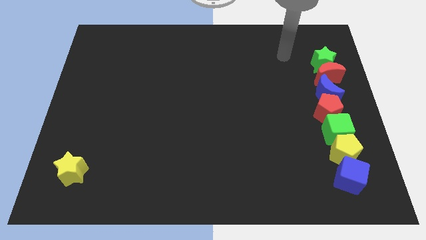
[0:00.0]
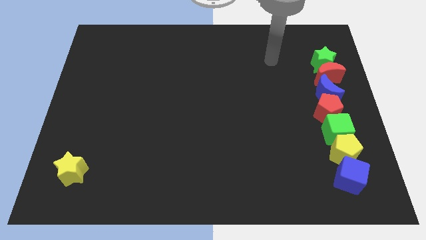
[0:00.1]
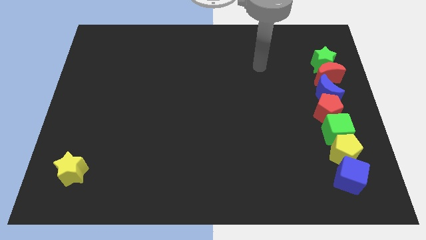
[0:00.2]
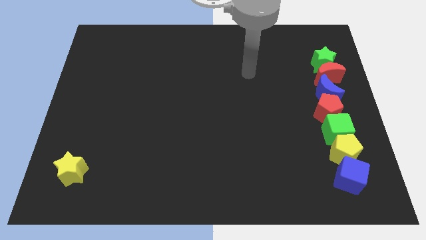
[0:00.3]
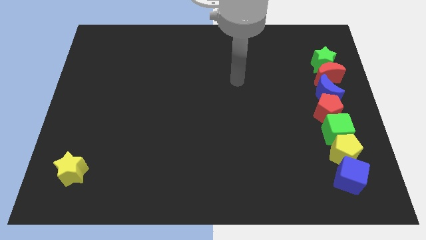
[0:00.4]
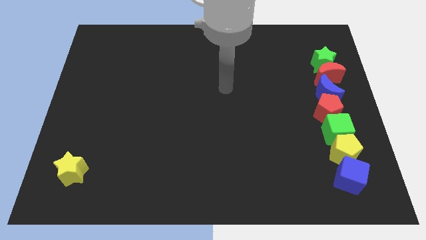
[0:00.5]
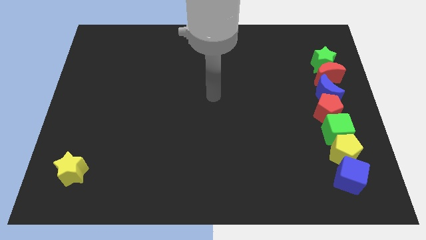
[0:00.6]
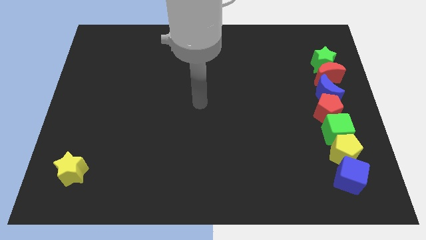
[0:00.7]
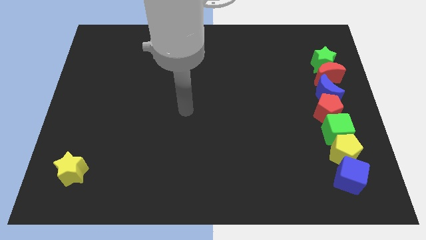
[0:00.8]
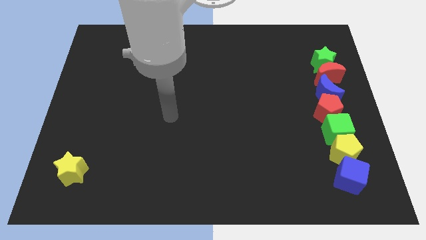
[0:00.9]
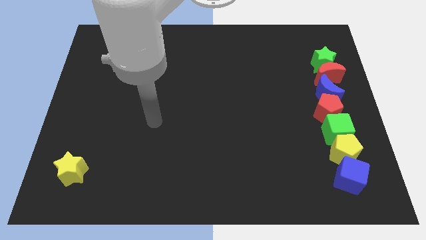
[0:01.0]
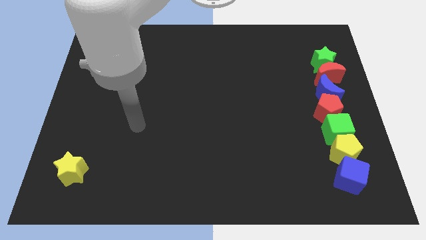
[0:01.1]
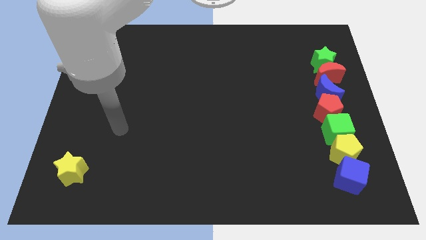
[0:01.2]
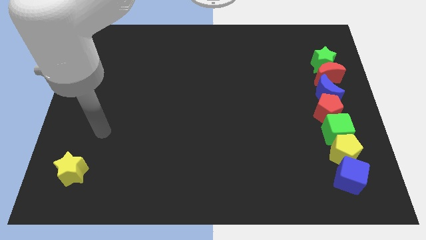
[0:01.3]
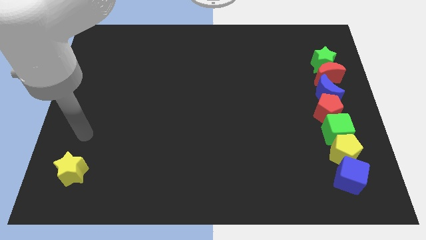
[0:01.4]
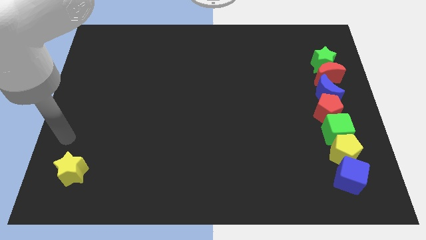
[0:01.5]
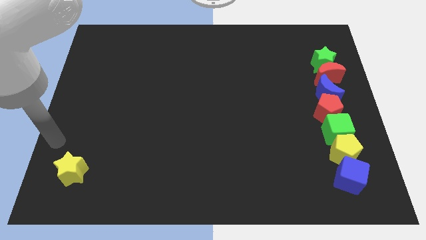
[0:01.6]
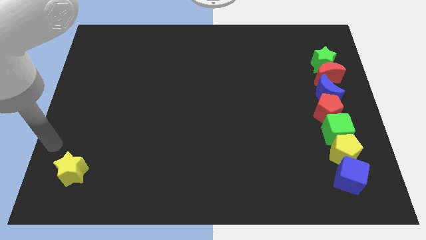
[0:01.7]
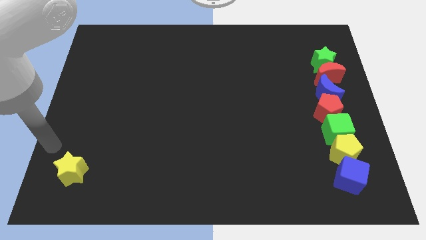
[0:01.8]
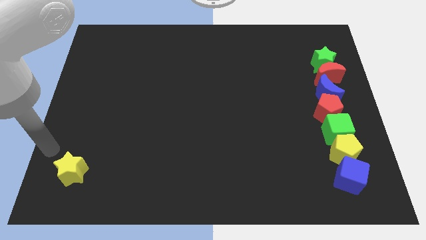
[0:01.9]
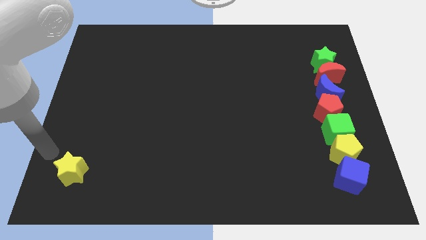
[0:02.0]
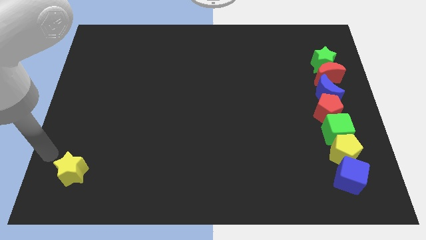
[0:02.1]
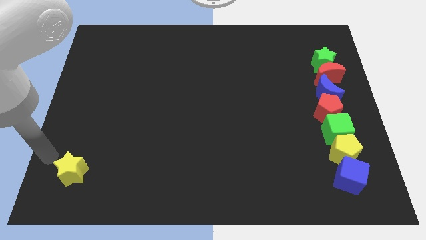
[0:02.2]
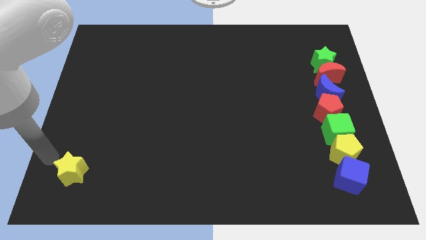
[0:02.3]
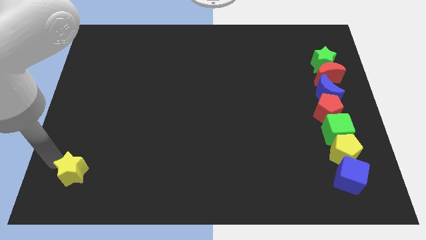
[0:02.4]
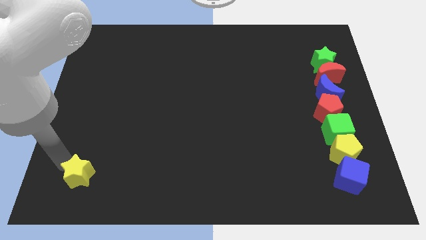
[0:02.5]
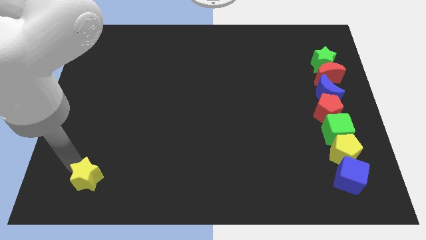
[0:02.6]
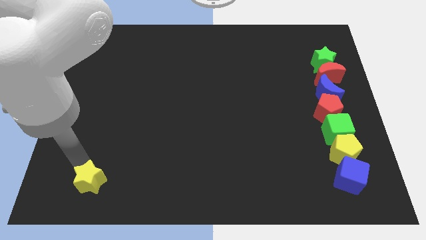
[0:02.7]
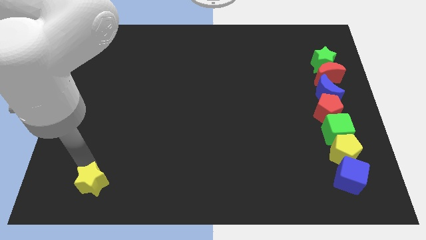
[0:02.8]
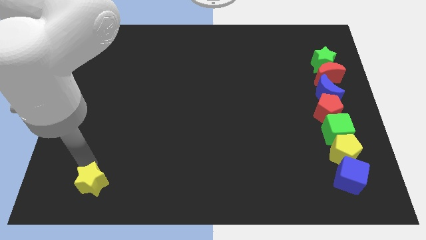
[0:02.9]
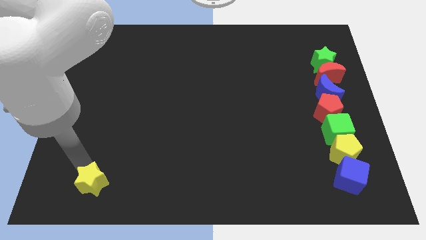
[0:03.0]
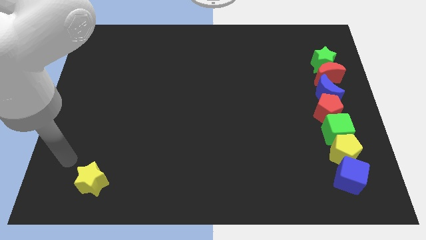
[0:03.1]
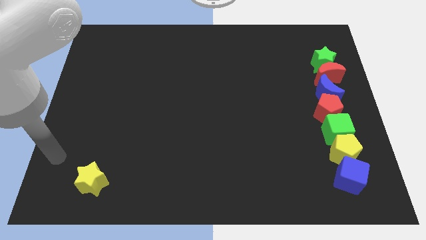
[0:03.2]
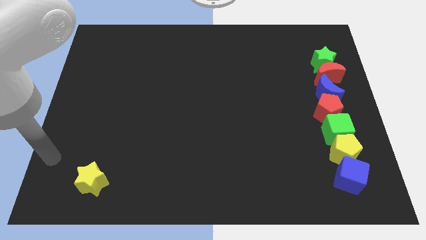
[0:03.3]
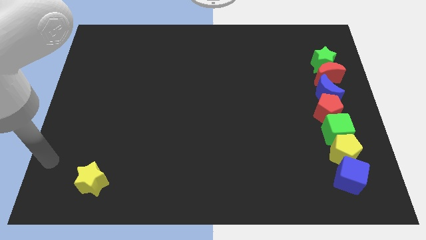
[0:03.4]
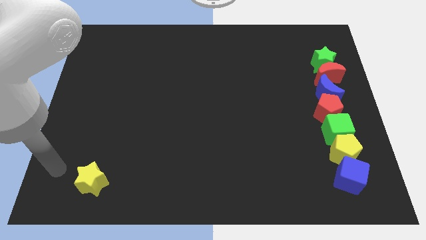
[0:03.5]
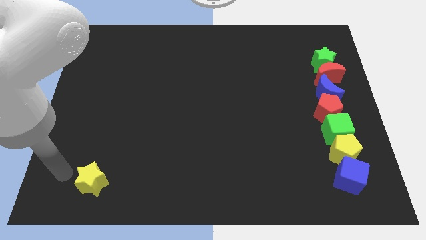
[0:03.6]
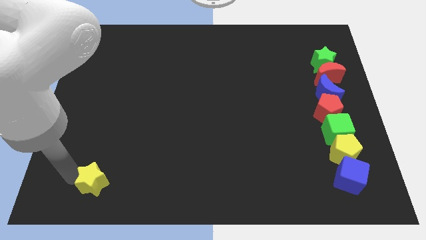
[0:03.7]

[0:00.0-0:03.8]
move yellow star slightly right

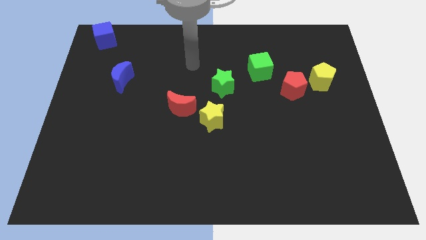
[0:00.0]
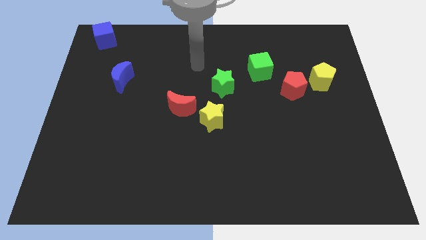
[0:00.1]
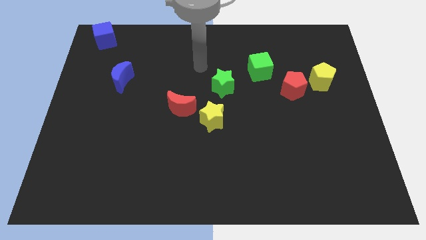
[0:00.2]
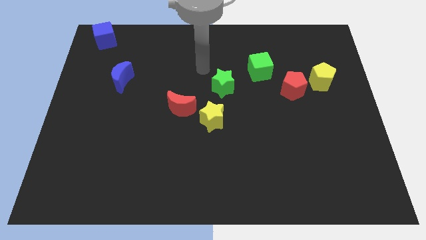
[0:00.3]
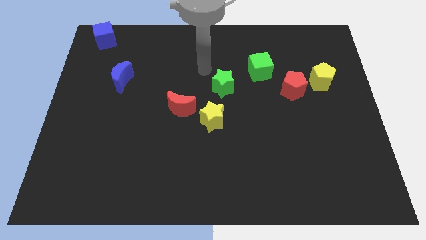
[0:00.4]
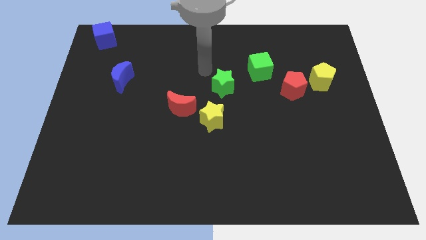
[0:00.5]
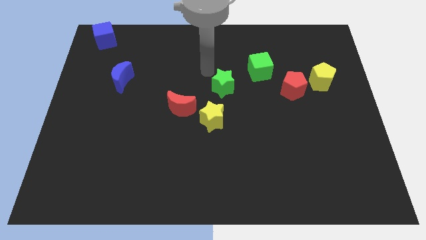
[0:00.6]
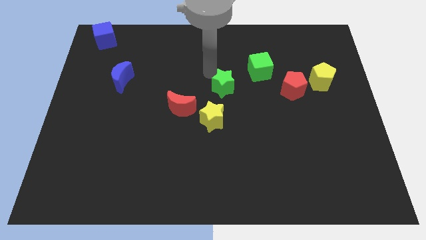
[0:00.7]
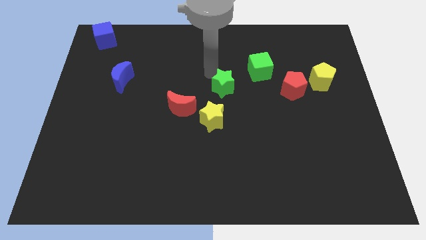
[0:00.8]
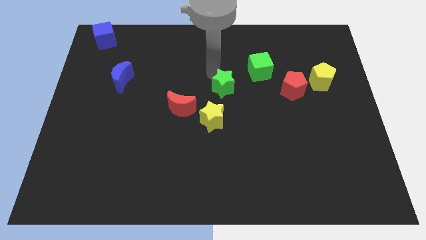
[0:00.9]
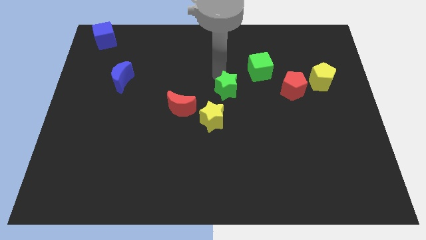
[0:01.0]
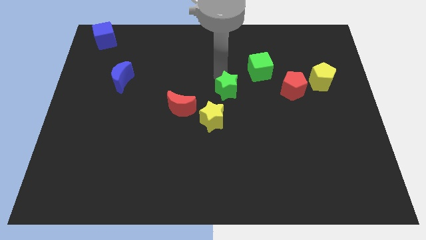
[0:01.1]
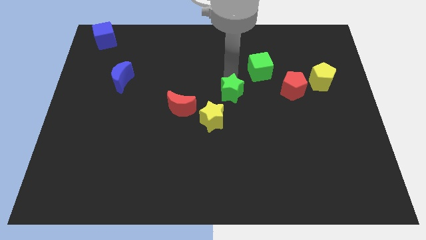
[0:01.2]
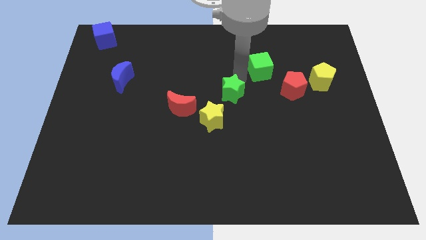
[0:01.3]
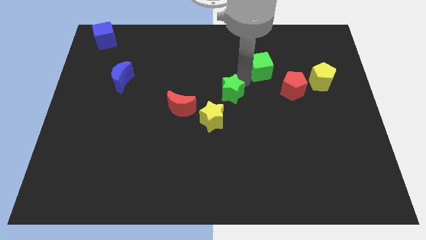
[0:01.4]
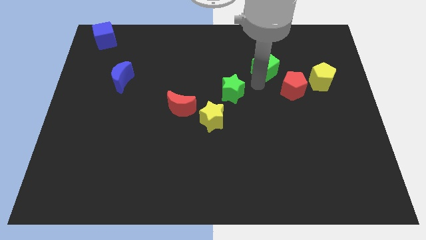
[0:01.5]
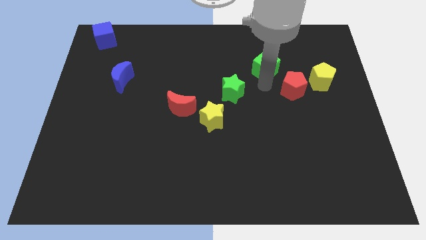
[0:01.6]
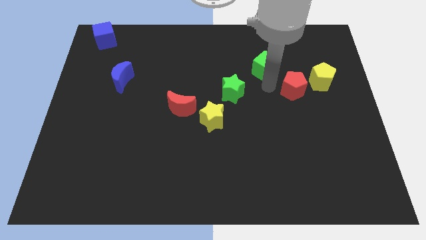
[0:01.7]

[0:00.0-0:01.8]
place green star diagonally to the top right of the yellow star

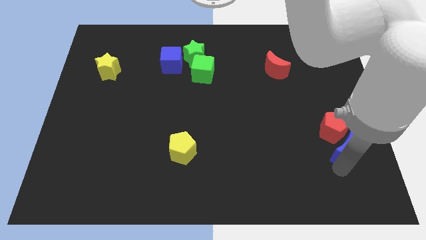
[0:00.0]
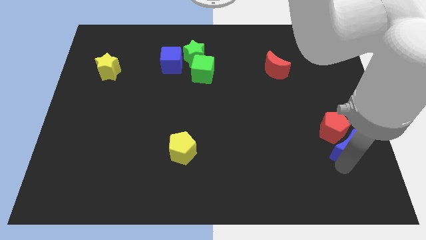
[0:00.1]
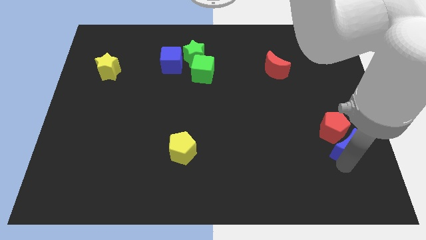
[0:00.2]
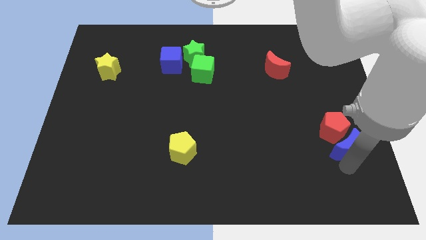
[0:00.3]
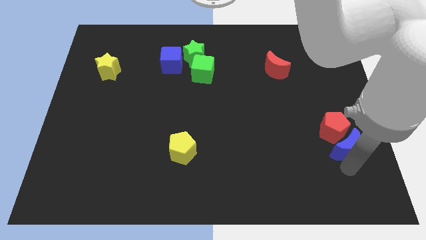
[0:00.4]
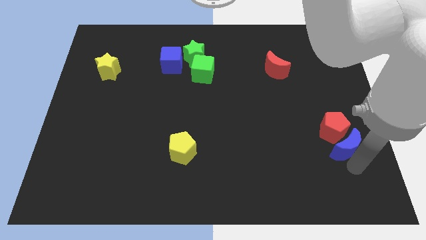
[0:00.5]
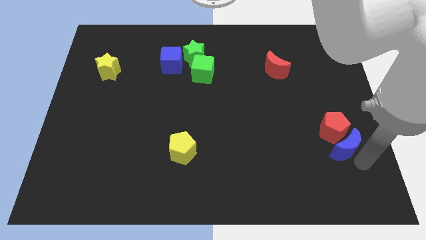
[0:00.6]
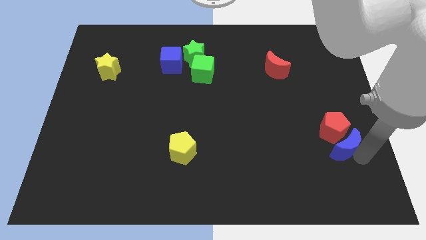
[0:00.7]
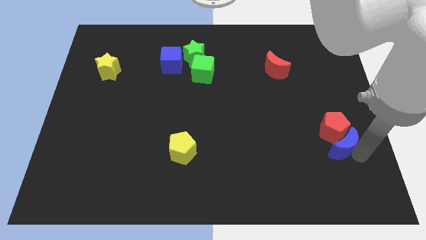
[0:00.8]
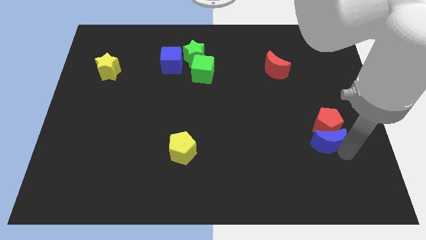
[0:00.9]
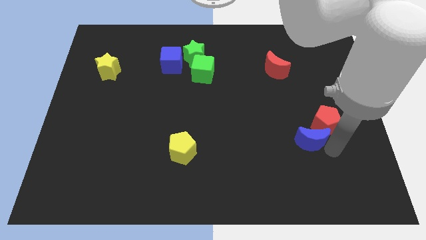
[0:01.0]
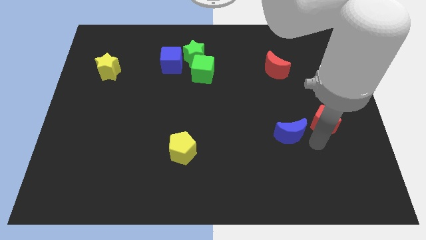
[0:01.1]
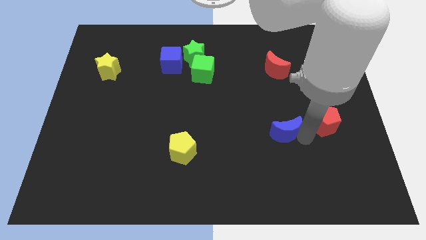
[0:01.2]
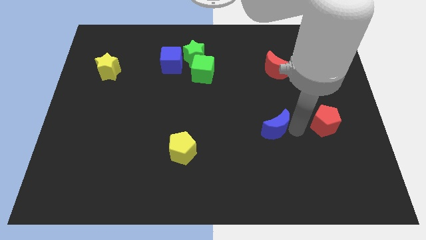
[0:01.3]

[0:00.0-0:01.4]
separate the blue crescent from the red pentagon

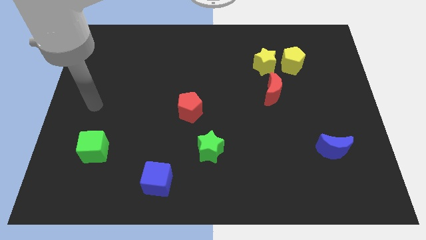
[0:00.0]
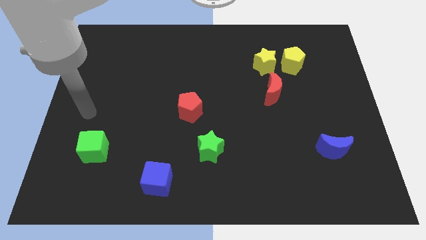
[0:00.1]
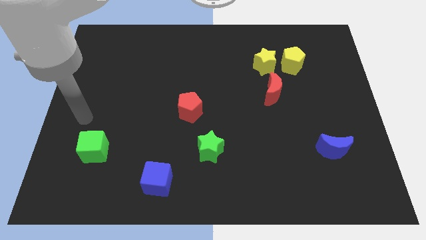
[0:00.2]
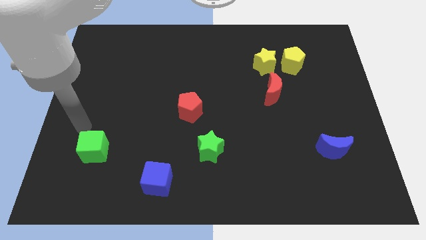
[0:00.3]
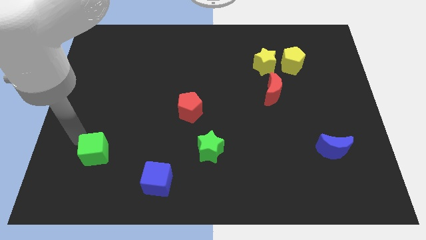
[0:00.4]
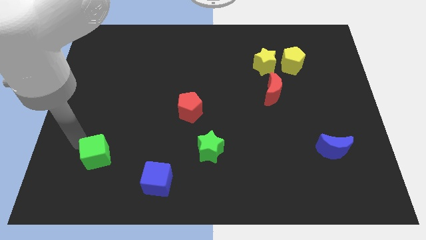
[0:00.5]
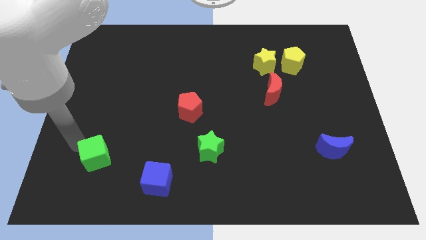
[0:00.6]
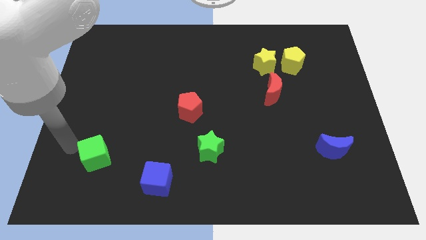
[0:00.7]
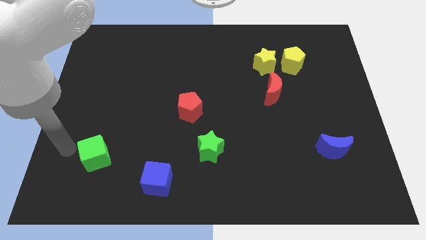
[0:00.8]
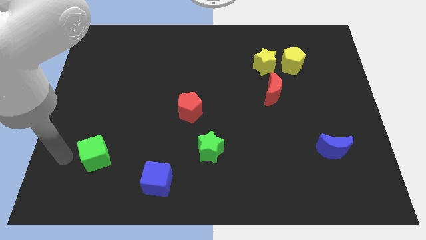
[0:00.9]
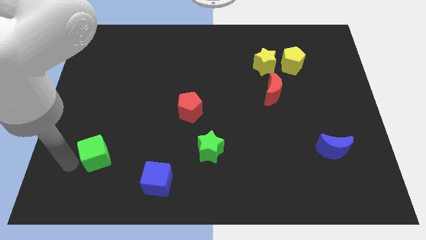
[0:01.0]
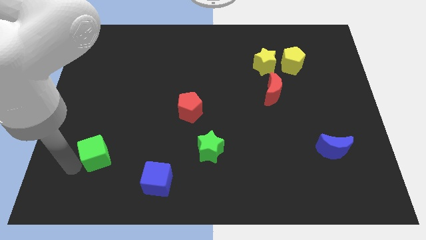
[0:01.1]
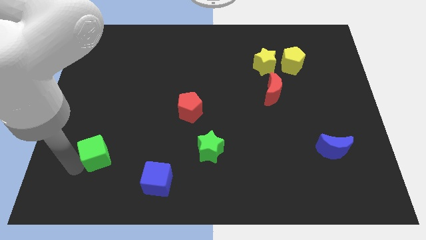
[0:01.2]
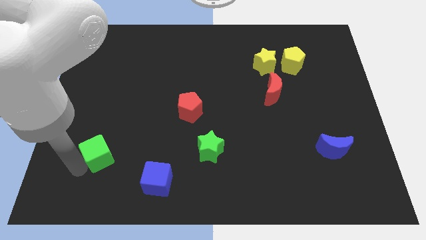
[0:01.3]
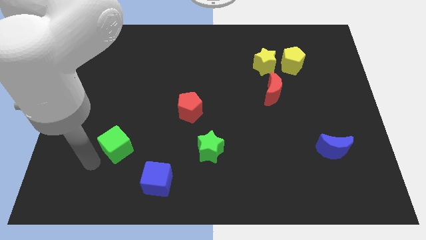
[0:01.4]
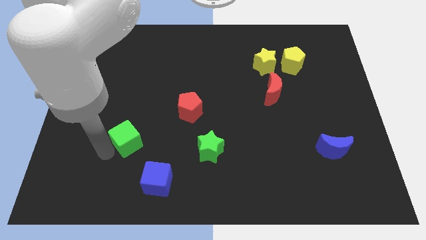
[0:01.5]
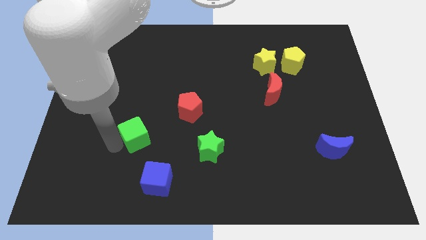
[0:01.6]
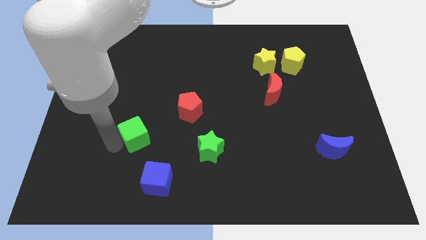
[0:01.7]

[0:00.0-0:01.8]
move the green cube to the top left of the blue cube

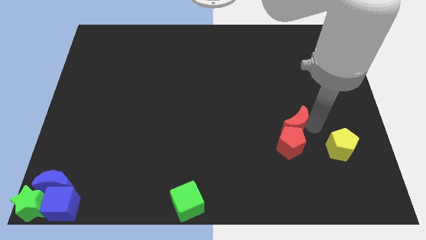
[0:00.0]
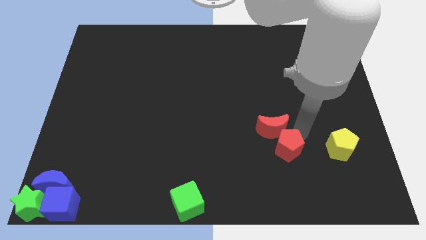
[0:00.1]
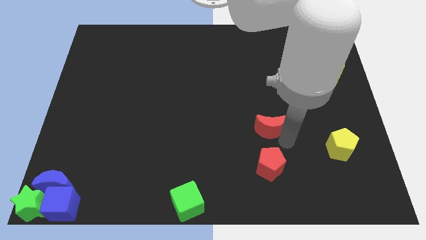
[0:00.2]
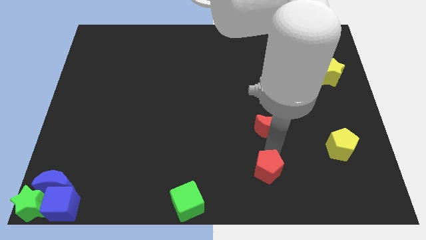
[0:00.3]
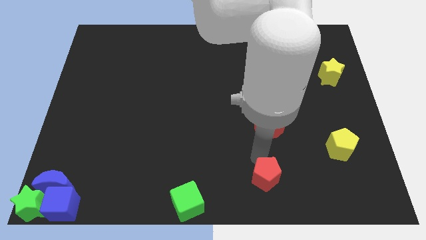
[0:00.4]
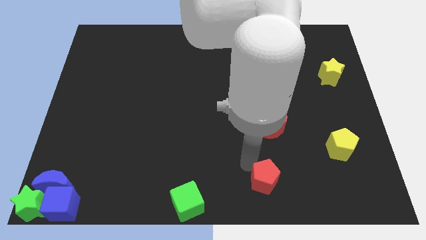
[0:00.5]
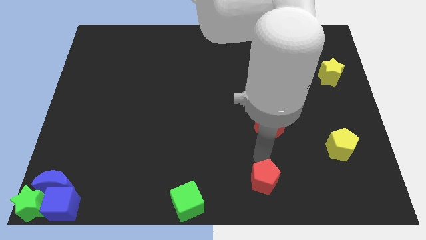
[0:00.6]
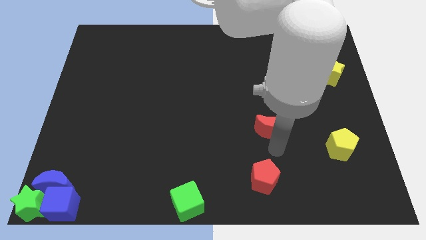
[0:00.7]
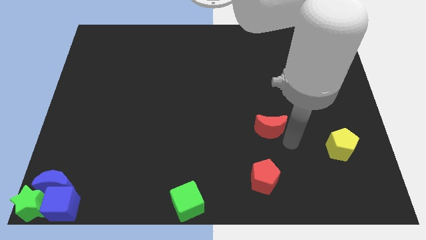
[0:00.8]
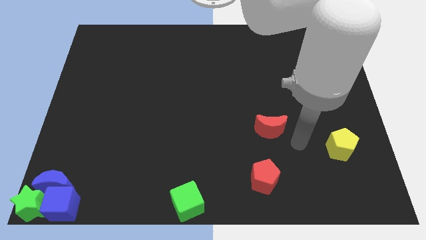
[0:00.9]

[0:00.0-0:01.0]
slightly move the red pentagon towards the diagonal right to the green cube
